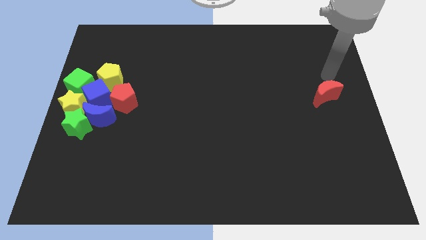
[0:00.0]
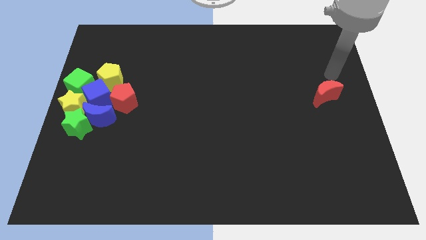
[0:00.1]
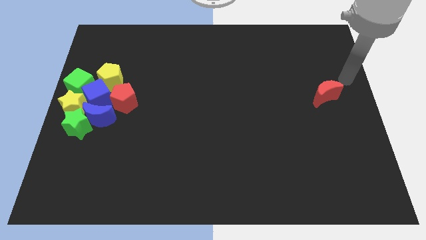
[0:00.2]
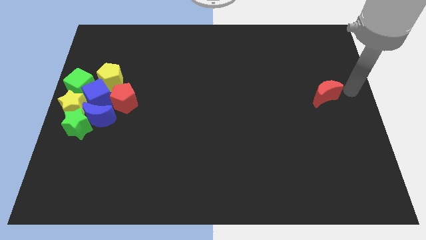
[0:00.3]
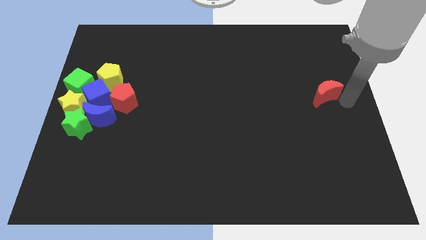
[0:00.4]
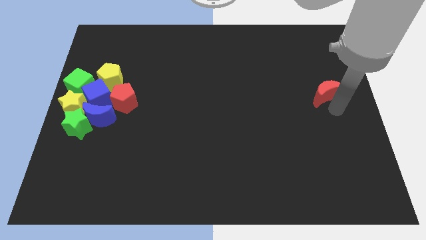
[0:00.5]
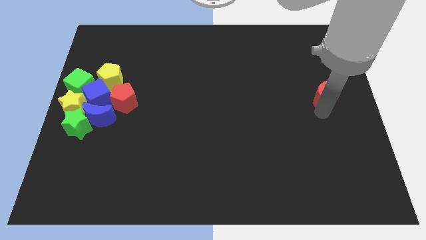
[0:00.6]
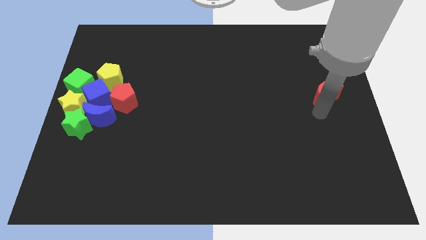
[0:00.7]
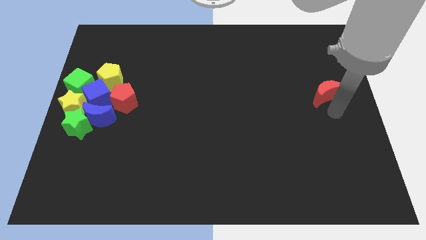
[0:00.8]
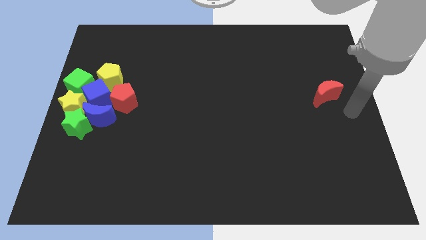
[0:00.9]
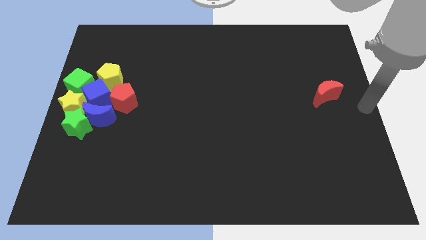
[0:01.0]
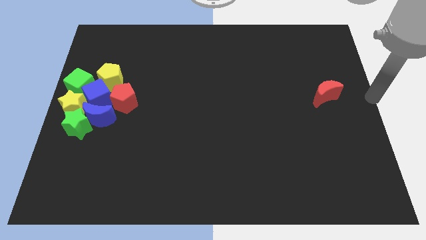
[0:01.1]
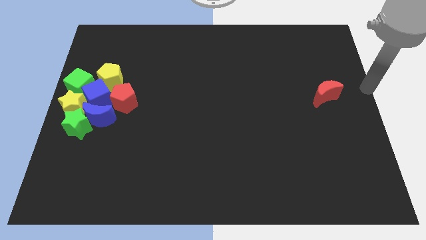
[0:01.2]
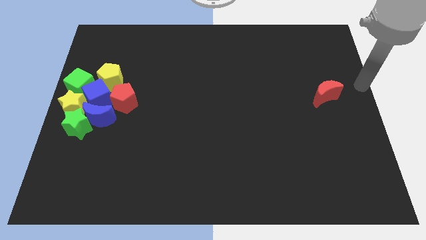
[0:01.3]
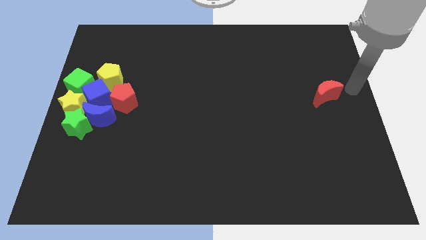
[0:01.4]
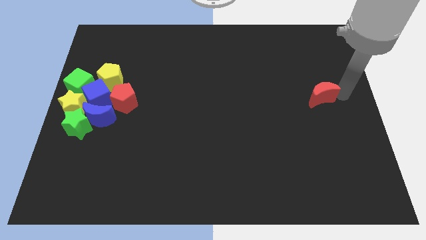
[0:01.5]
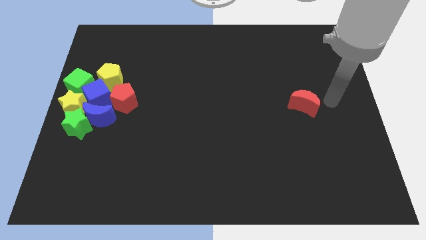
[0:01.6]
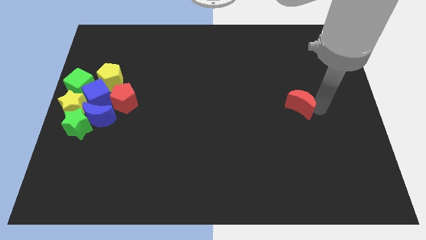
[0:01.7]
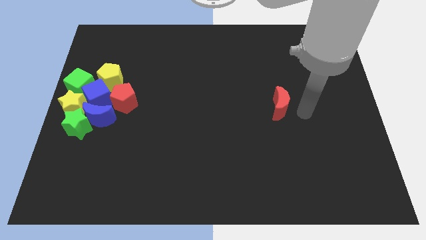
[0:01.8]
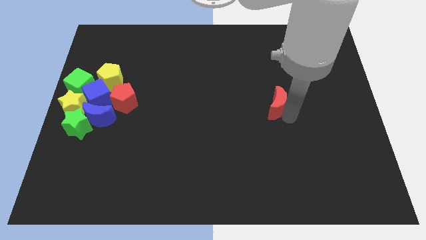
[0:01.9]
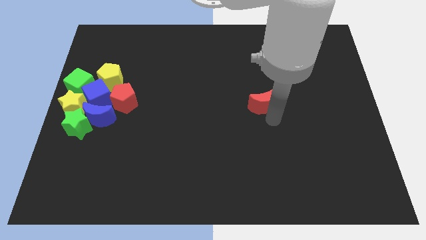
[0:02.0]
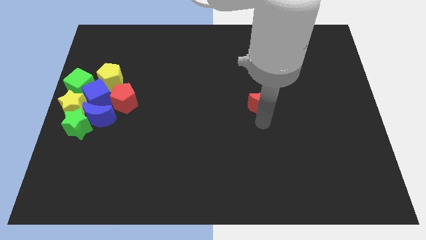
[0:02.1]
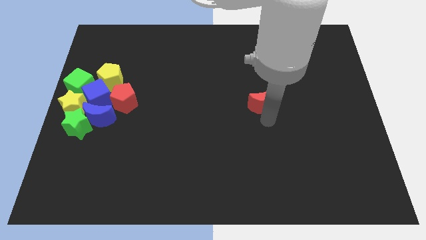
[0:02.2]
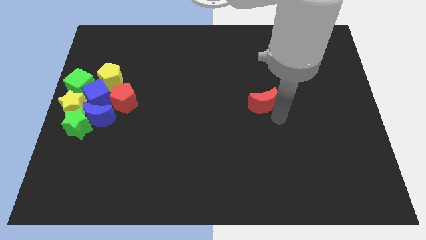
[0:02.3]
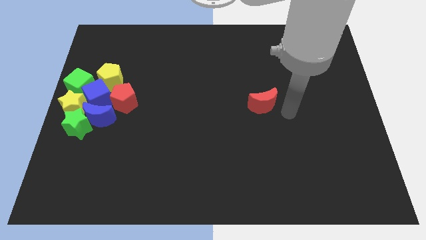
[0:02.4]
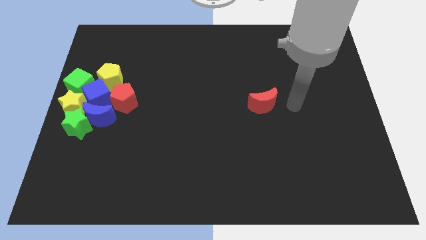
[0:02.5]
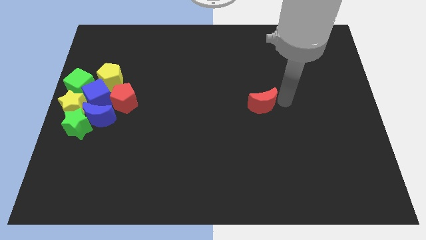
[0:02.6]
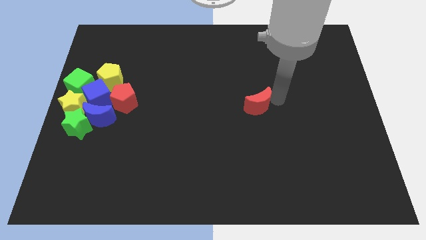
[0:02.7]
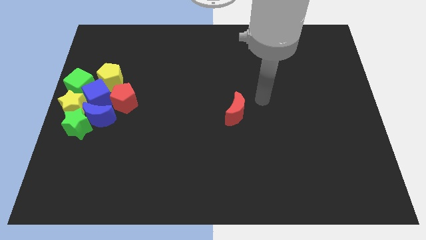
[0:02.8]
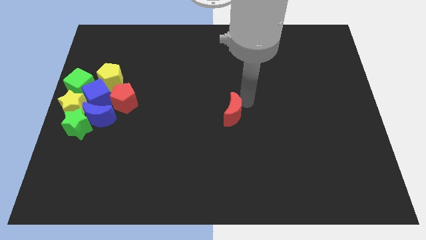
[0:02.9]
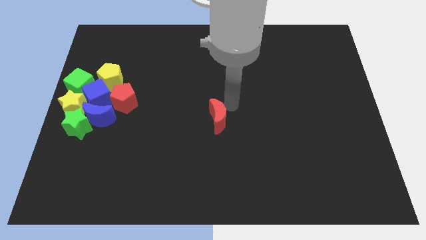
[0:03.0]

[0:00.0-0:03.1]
move the red crescent to the center

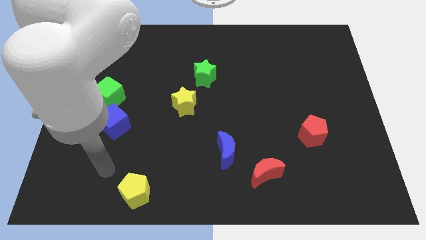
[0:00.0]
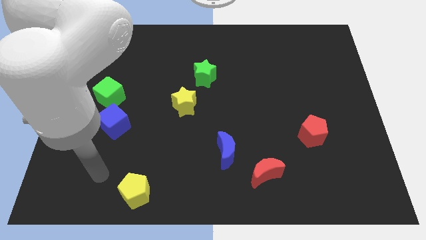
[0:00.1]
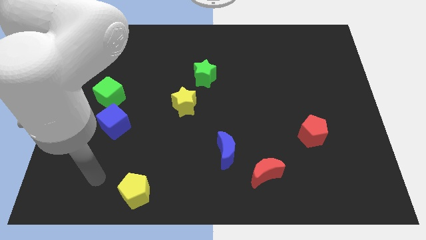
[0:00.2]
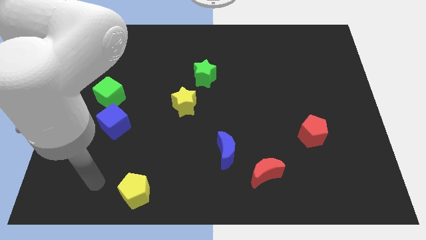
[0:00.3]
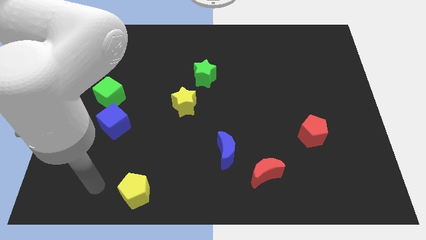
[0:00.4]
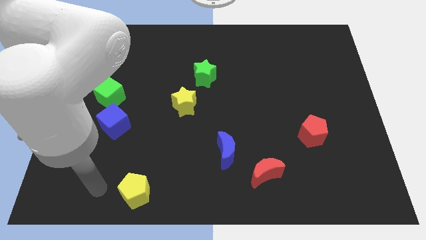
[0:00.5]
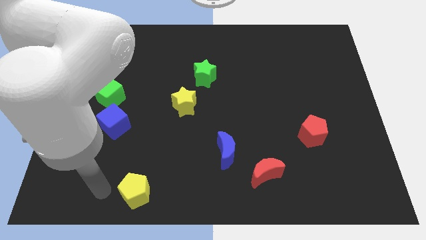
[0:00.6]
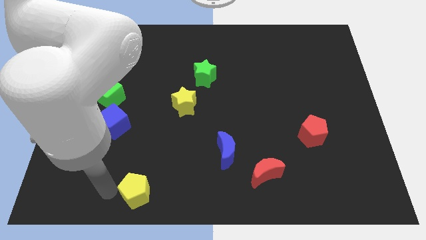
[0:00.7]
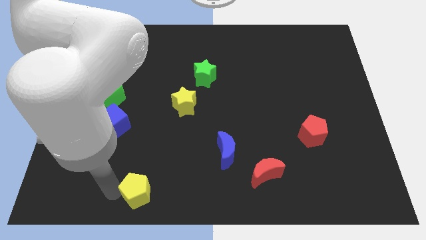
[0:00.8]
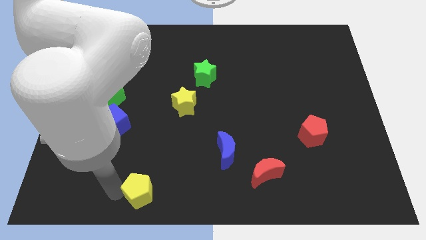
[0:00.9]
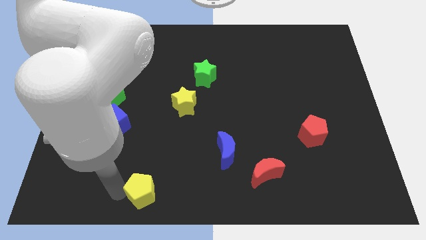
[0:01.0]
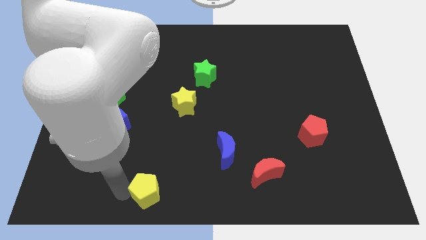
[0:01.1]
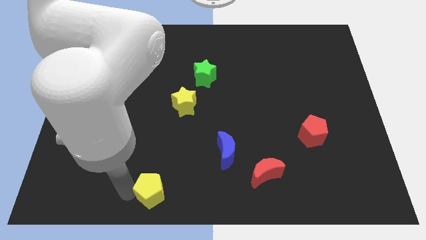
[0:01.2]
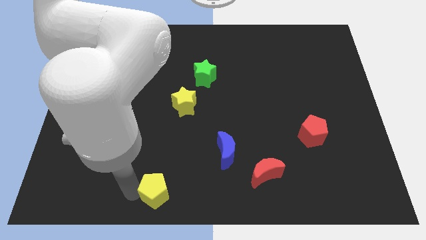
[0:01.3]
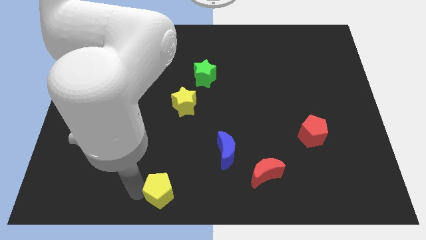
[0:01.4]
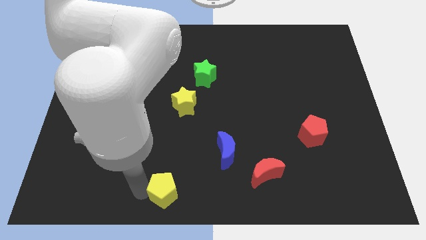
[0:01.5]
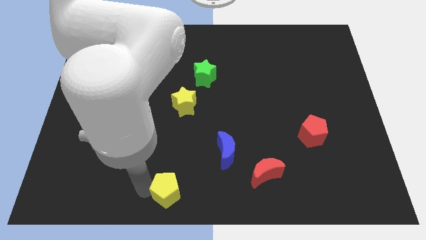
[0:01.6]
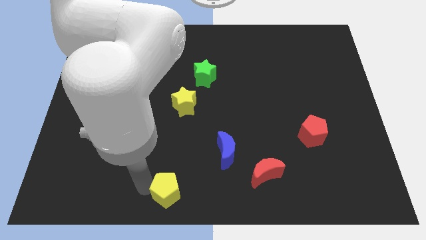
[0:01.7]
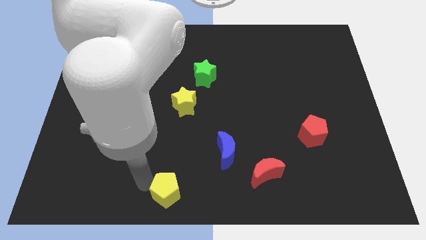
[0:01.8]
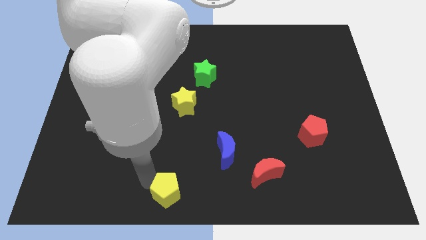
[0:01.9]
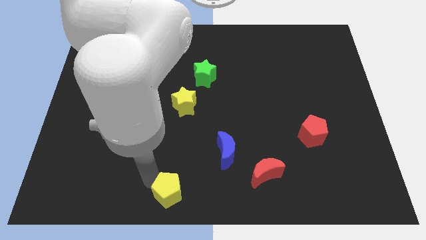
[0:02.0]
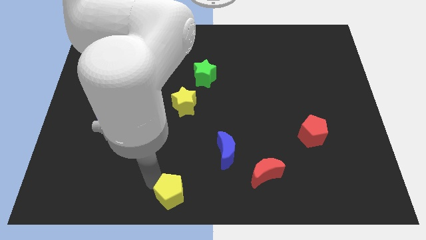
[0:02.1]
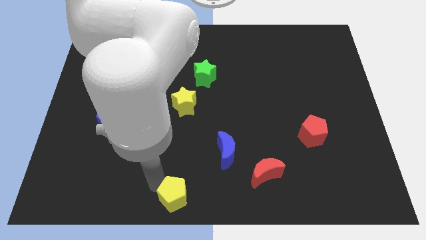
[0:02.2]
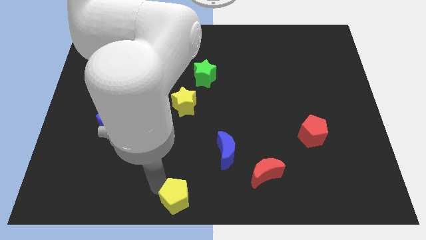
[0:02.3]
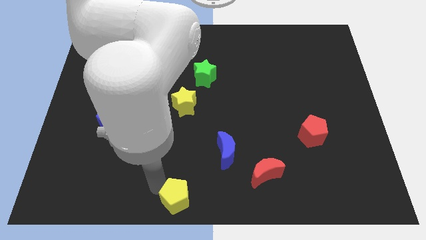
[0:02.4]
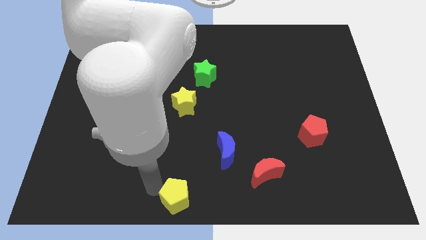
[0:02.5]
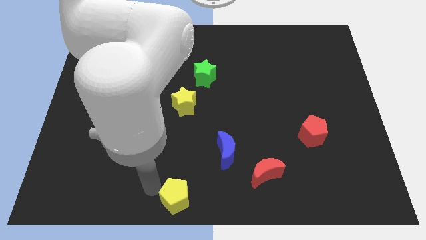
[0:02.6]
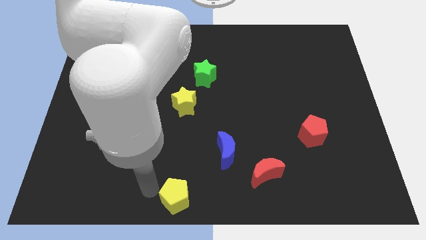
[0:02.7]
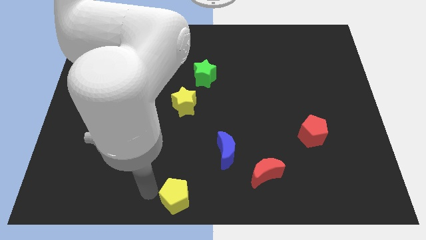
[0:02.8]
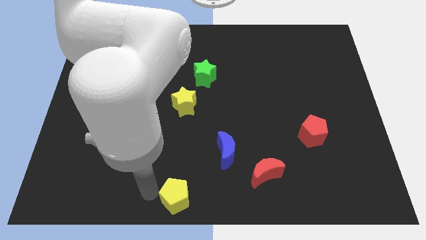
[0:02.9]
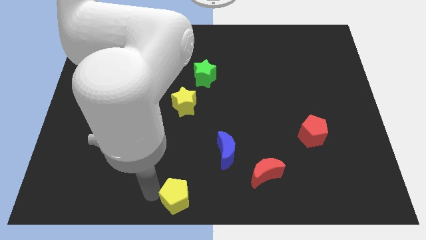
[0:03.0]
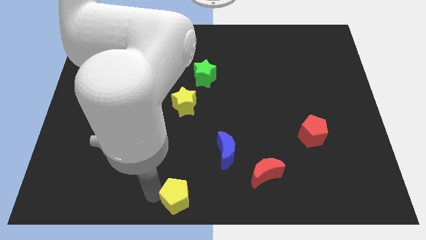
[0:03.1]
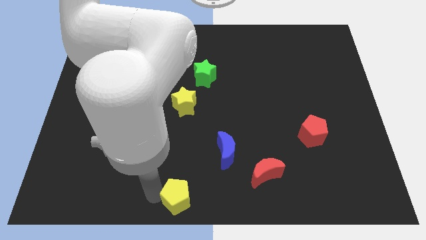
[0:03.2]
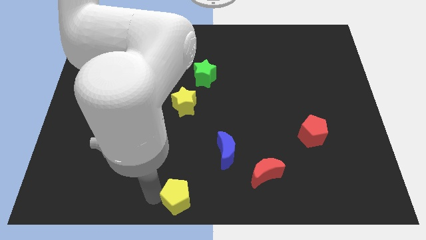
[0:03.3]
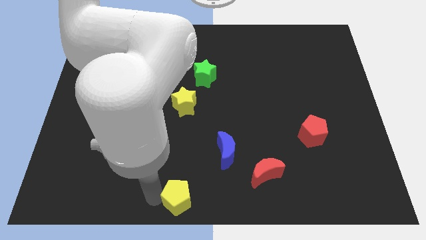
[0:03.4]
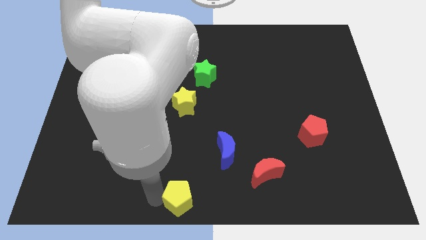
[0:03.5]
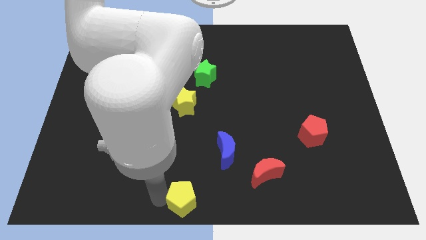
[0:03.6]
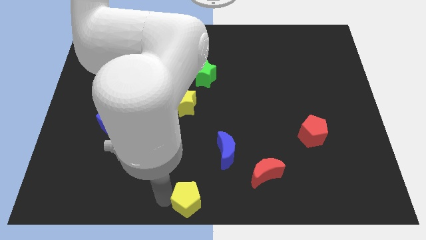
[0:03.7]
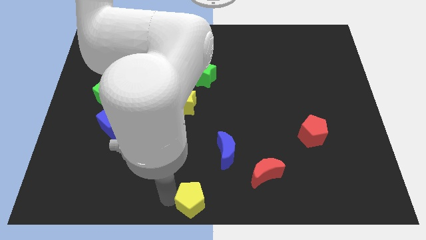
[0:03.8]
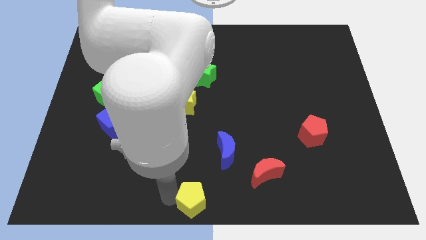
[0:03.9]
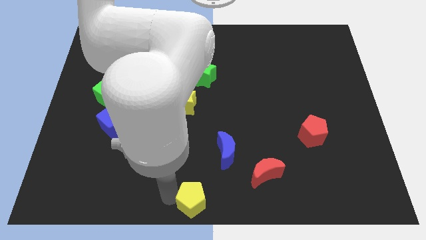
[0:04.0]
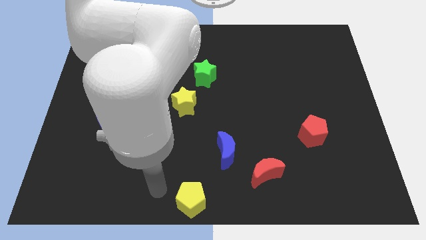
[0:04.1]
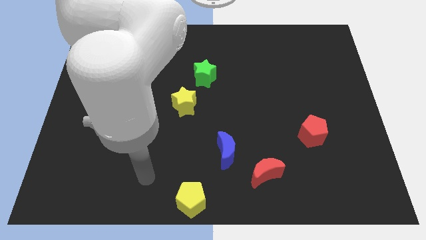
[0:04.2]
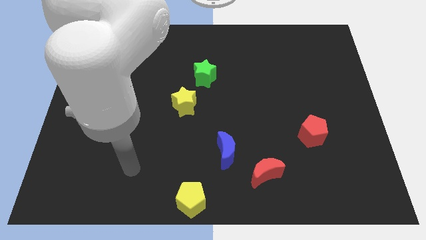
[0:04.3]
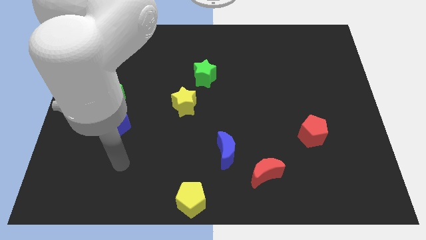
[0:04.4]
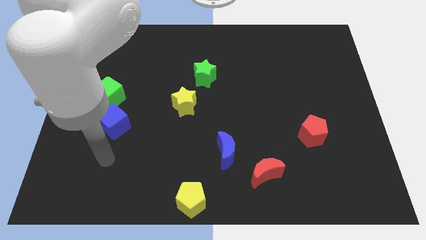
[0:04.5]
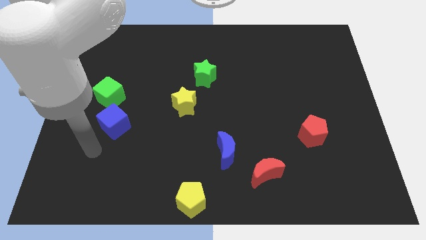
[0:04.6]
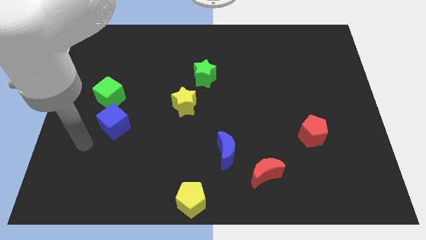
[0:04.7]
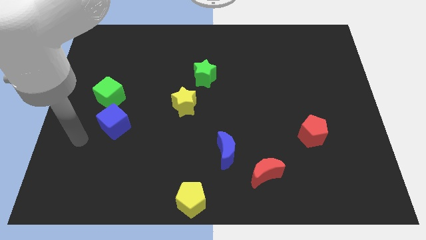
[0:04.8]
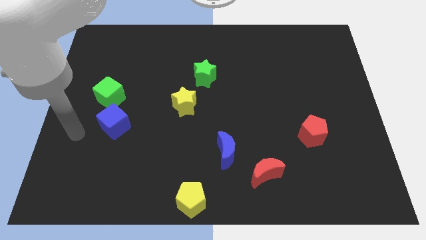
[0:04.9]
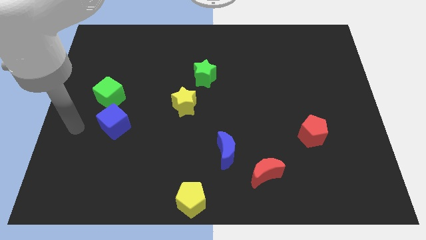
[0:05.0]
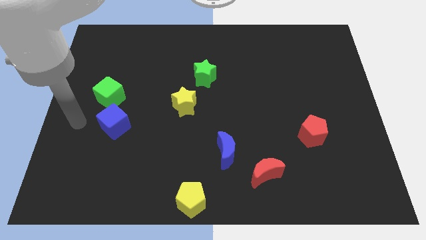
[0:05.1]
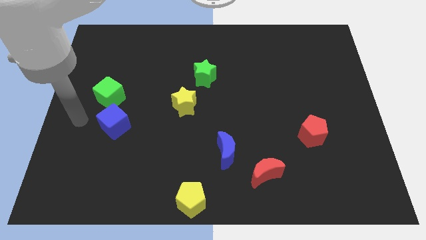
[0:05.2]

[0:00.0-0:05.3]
push the yellow pentagon to the bottom center of the board

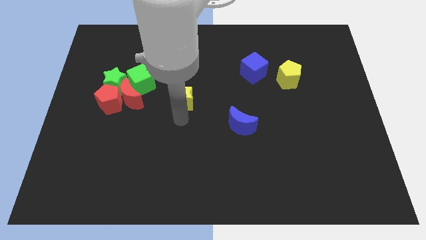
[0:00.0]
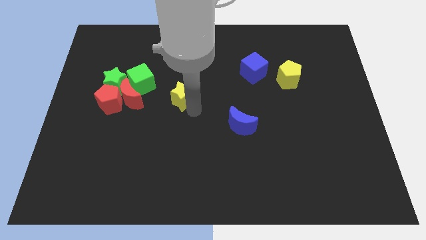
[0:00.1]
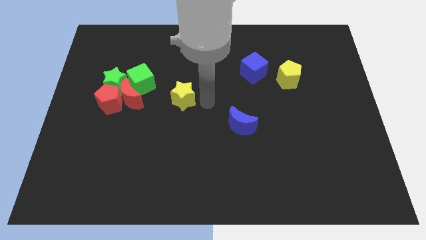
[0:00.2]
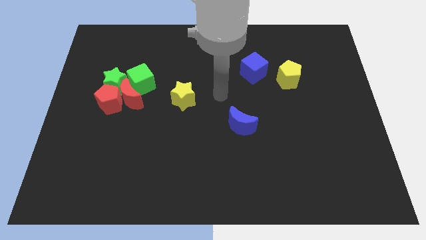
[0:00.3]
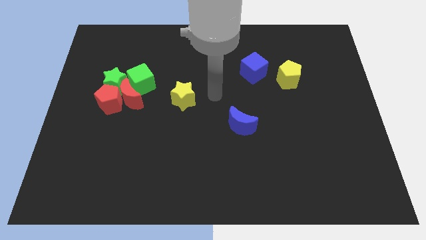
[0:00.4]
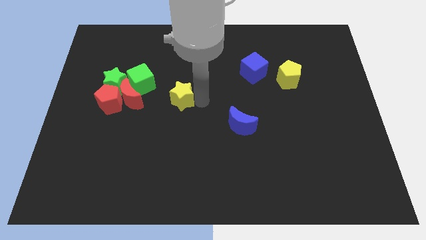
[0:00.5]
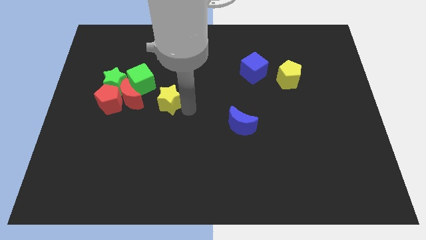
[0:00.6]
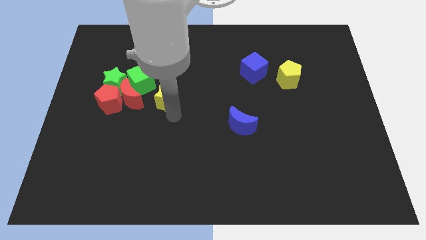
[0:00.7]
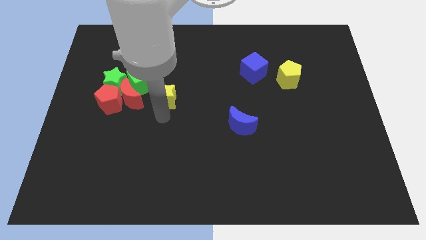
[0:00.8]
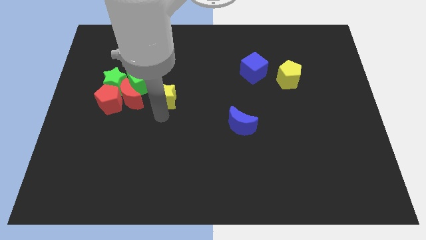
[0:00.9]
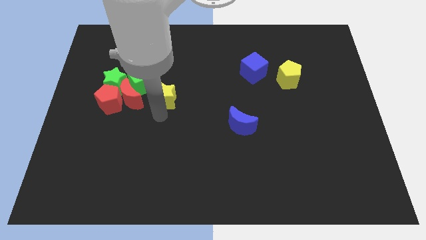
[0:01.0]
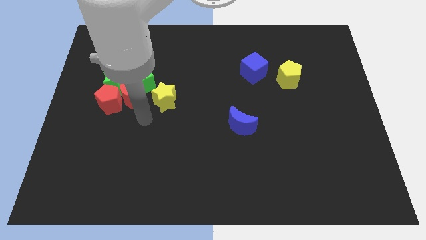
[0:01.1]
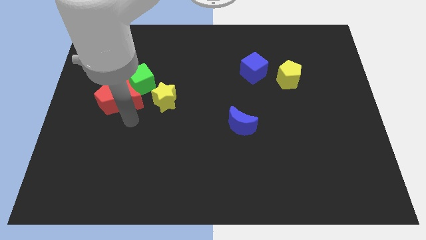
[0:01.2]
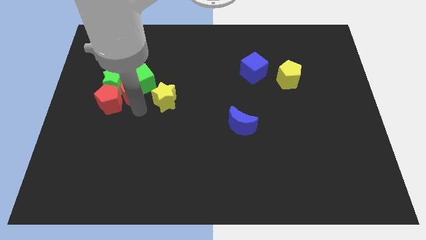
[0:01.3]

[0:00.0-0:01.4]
move the yellow star to the bottom right of the green cube
